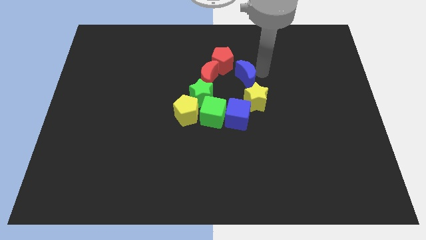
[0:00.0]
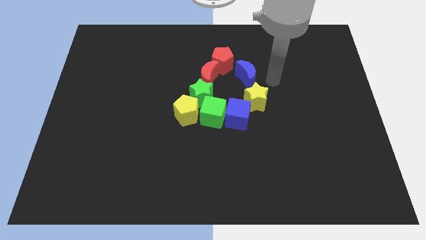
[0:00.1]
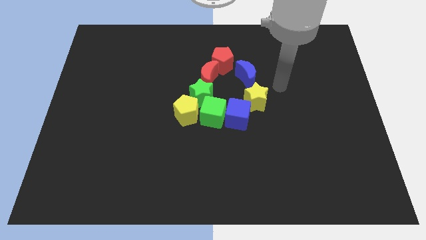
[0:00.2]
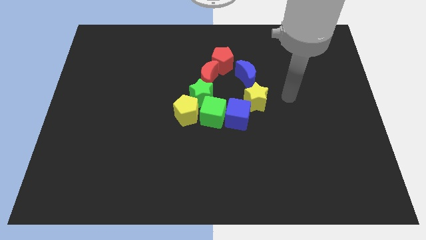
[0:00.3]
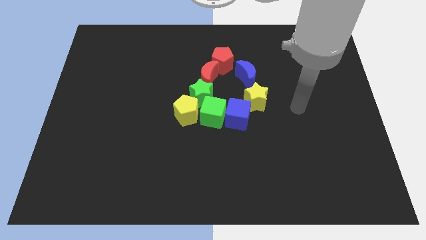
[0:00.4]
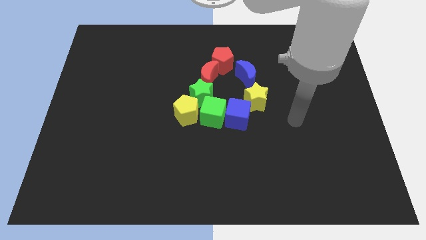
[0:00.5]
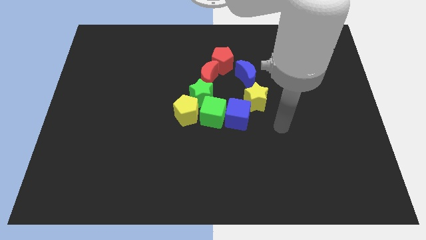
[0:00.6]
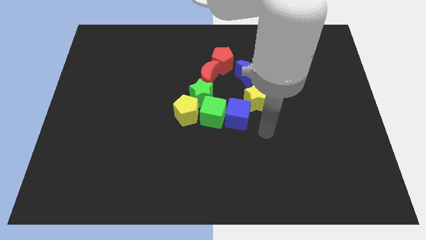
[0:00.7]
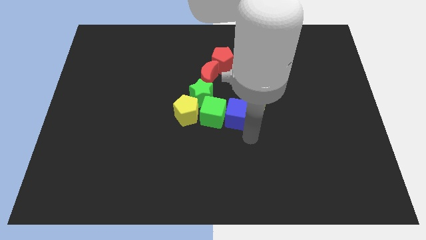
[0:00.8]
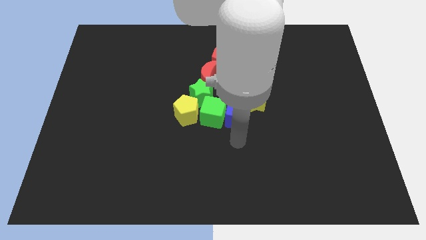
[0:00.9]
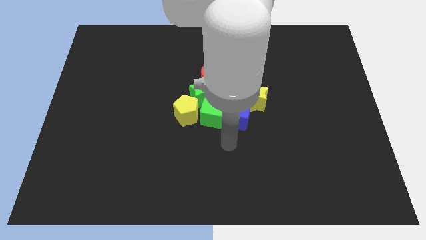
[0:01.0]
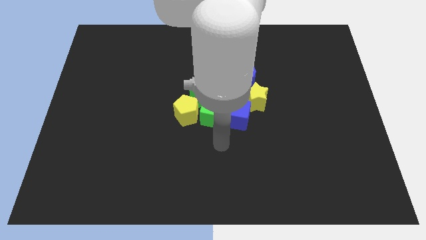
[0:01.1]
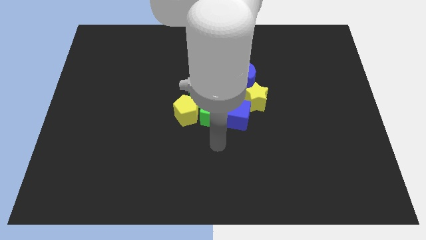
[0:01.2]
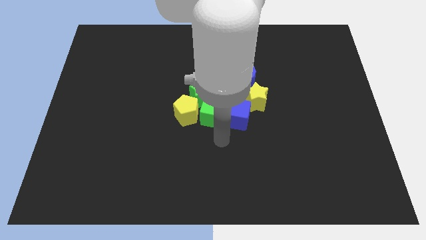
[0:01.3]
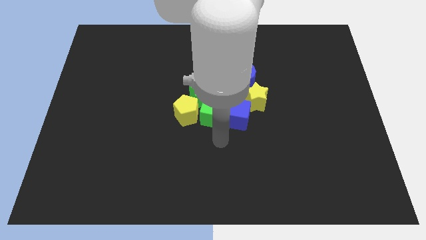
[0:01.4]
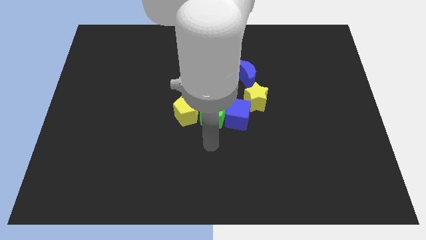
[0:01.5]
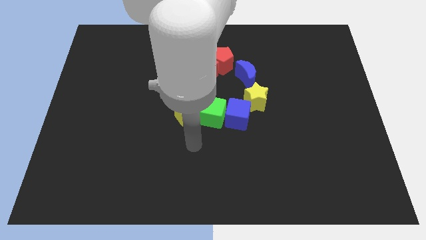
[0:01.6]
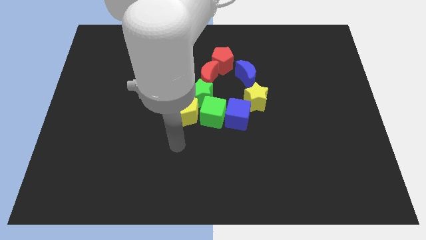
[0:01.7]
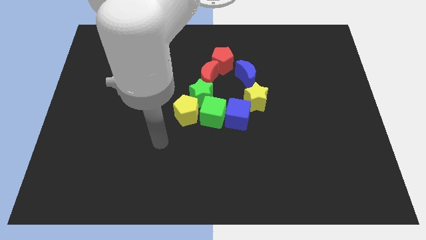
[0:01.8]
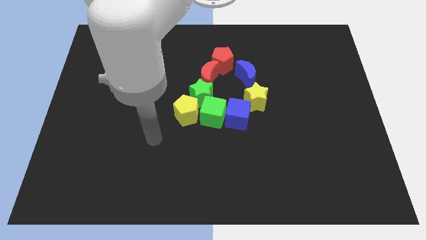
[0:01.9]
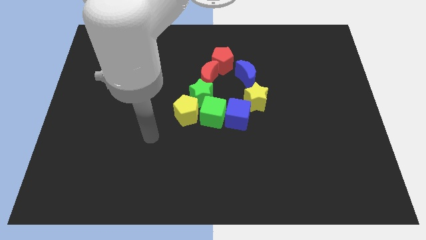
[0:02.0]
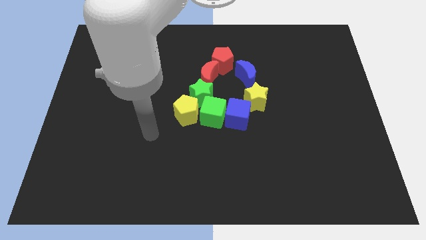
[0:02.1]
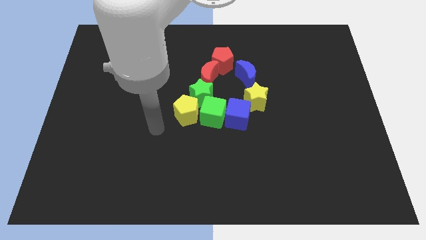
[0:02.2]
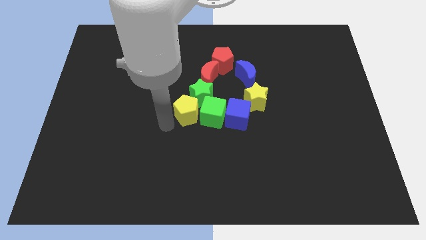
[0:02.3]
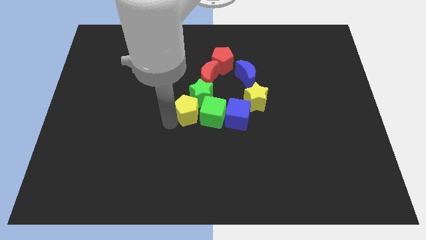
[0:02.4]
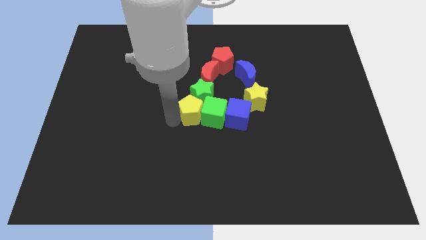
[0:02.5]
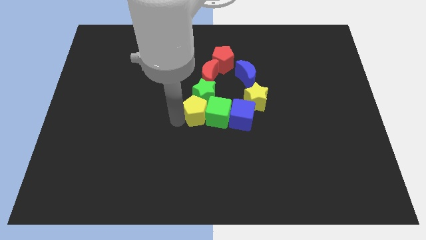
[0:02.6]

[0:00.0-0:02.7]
push the yellow pentagon closer to the cubes to form a circle

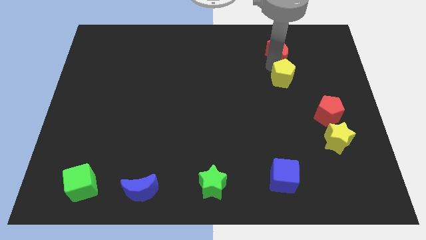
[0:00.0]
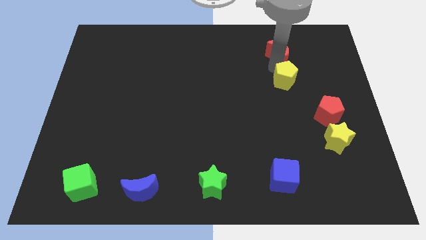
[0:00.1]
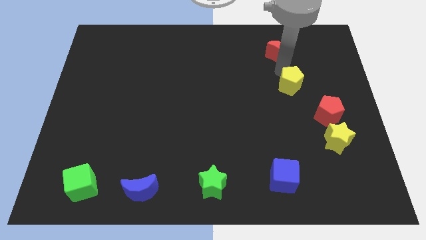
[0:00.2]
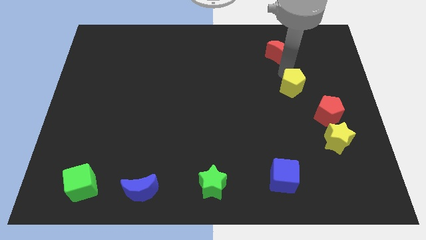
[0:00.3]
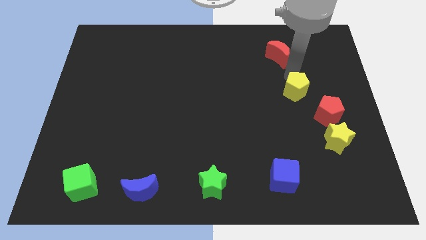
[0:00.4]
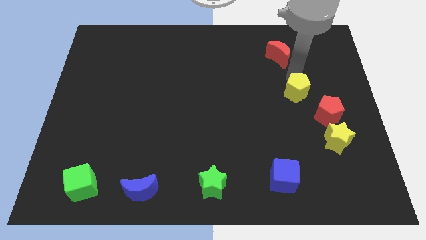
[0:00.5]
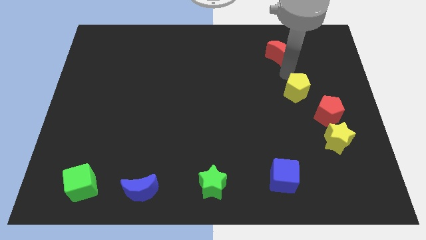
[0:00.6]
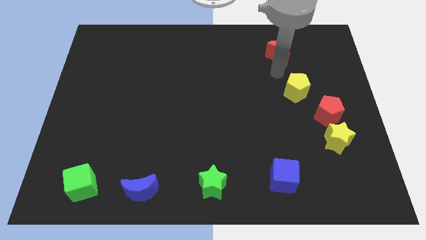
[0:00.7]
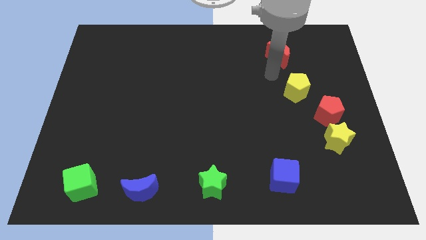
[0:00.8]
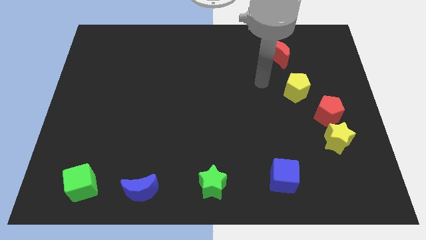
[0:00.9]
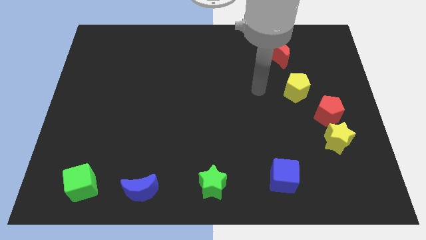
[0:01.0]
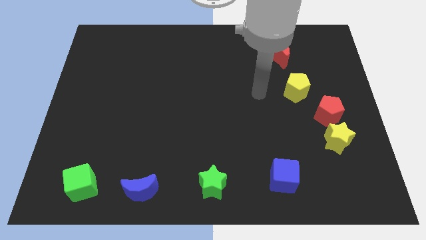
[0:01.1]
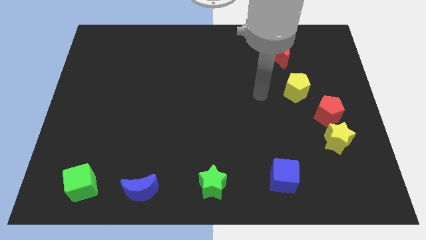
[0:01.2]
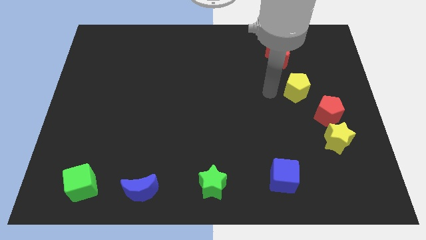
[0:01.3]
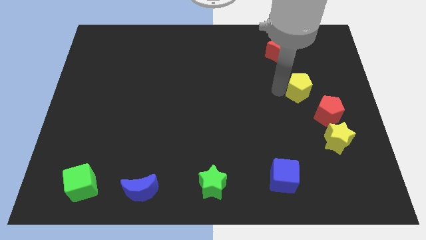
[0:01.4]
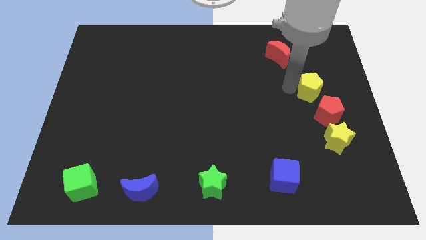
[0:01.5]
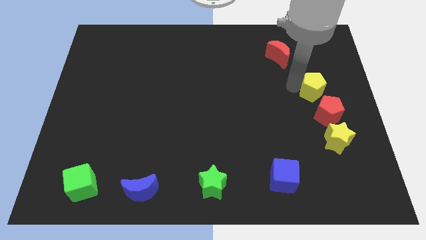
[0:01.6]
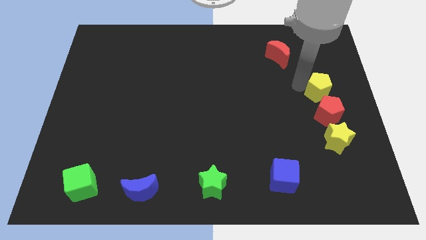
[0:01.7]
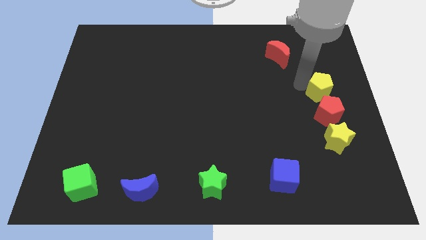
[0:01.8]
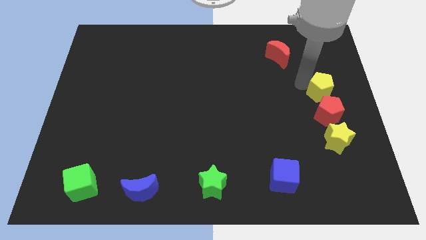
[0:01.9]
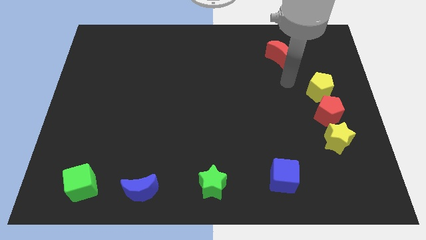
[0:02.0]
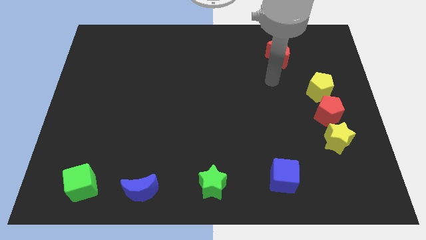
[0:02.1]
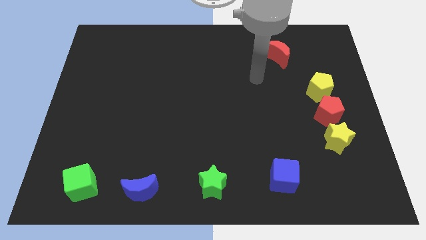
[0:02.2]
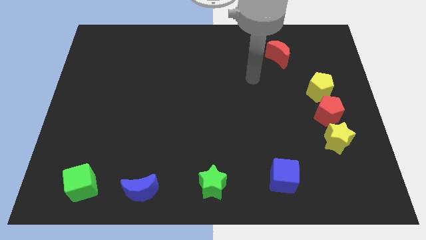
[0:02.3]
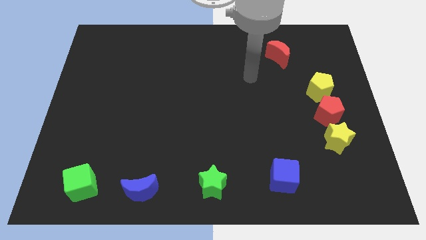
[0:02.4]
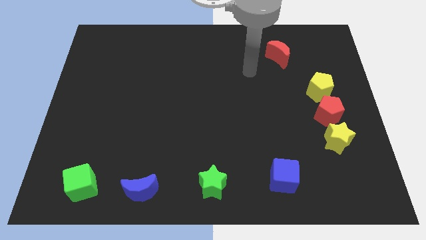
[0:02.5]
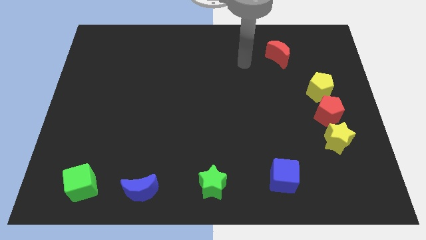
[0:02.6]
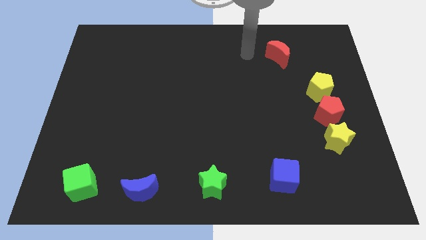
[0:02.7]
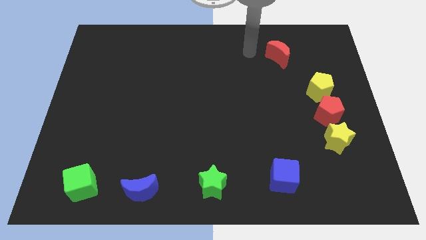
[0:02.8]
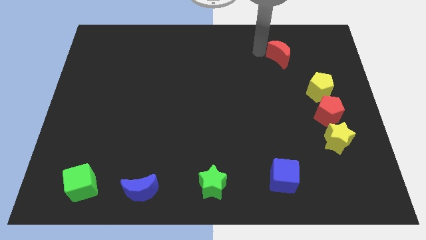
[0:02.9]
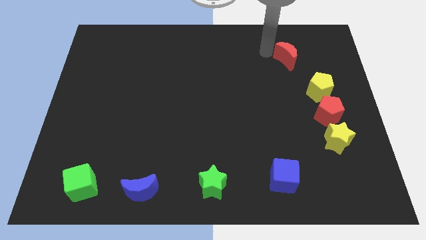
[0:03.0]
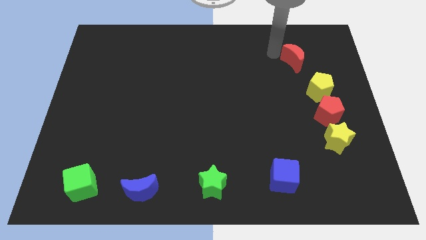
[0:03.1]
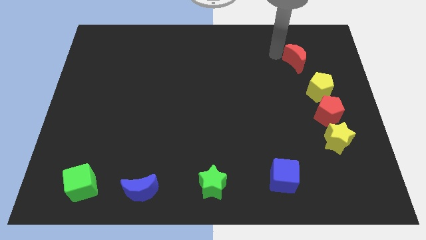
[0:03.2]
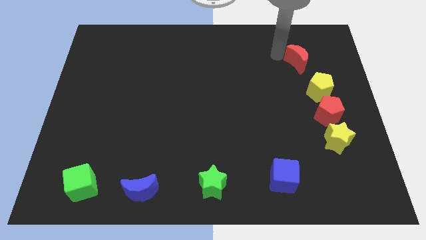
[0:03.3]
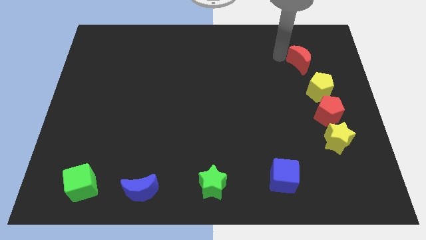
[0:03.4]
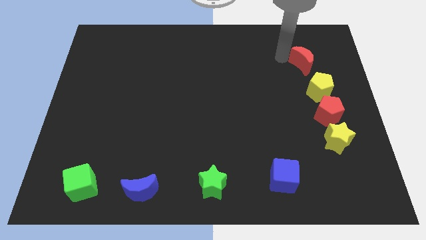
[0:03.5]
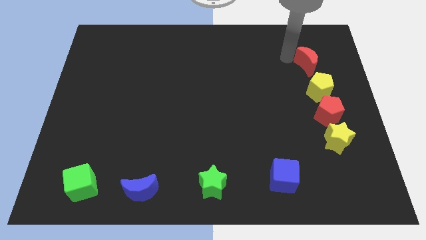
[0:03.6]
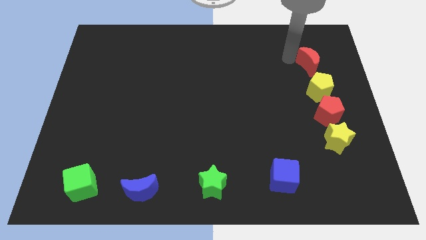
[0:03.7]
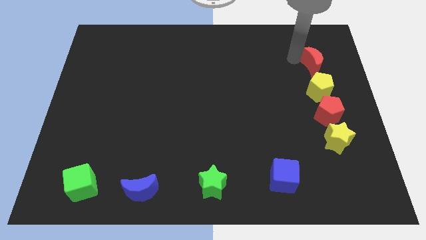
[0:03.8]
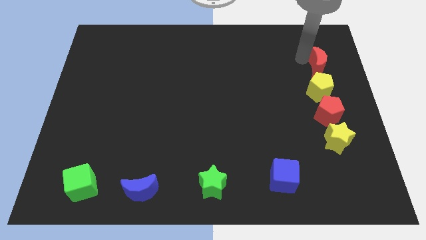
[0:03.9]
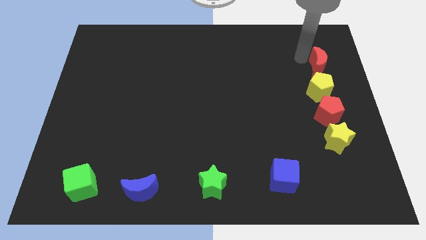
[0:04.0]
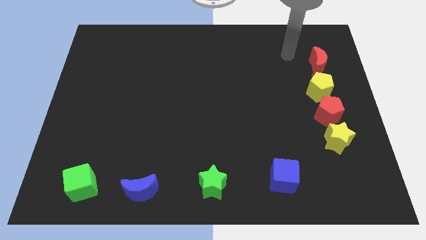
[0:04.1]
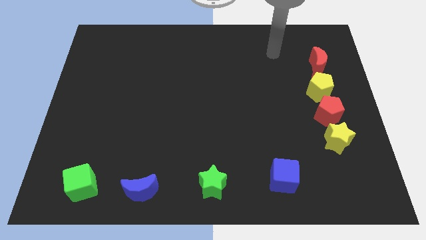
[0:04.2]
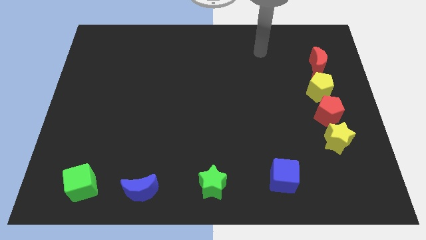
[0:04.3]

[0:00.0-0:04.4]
place the yellow penatgon and red moon above the red pentagon

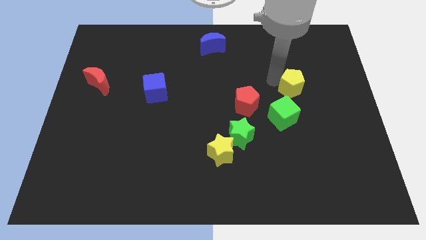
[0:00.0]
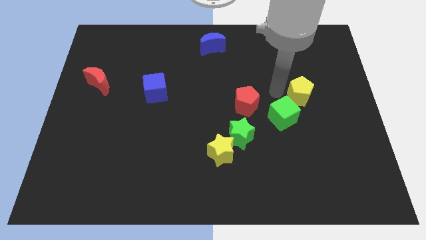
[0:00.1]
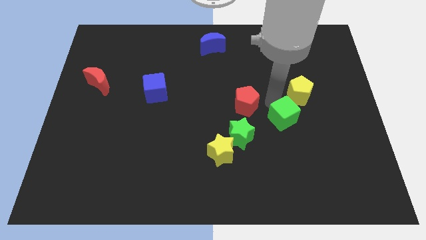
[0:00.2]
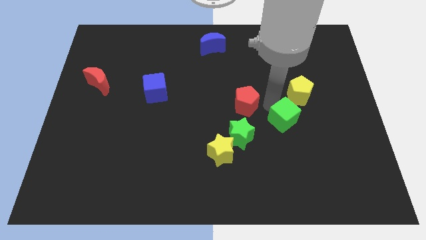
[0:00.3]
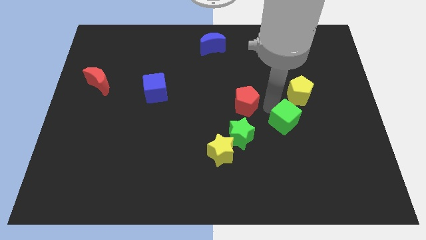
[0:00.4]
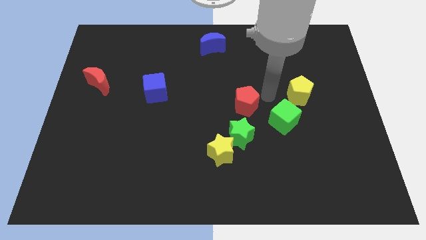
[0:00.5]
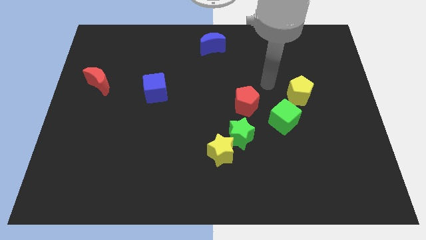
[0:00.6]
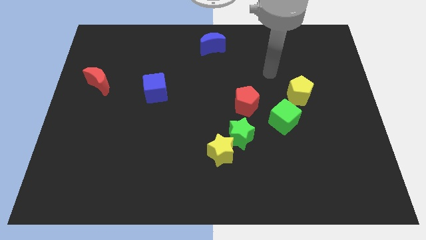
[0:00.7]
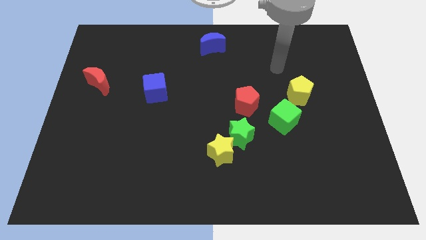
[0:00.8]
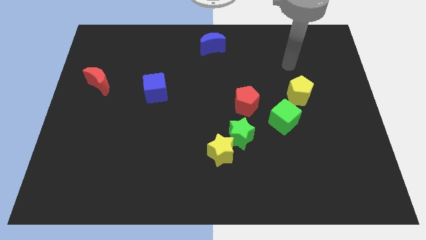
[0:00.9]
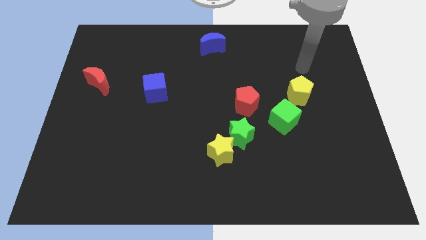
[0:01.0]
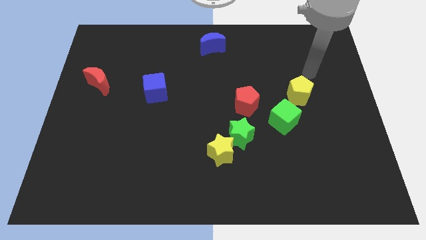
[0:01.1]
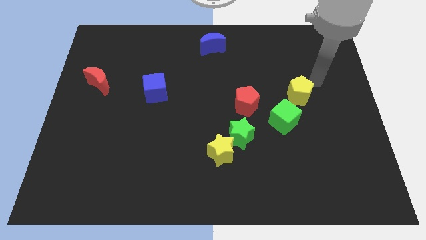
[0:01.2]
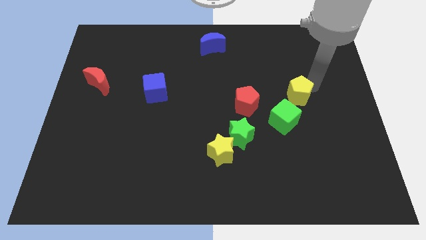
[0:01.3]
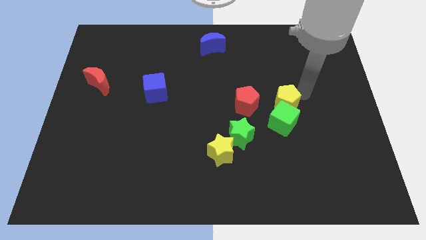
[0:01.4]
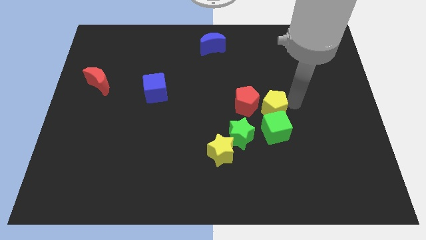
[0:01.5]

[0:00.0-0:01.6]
push yellow pentagon beside red pentagon

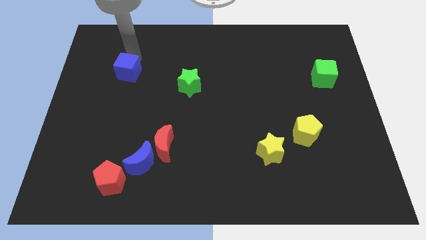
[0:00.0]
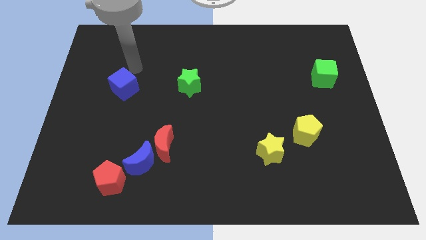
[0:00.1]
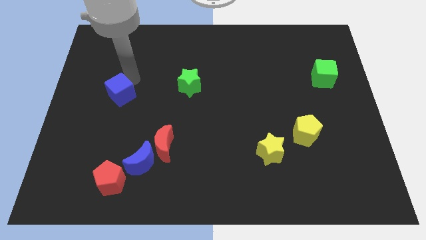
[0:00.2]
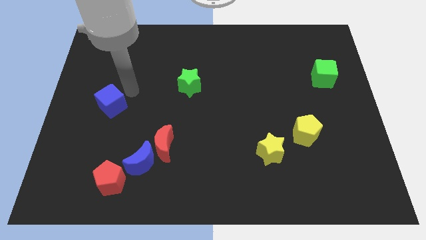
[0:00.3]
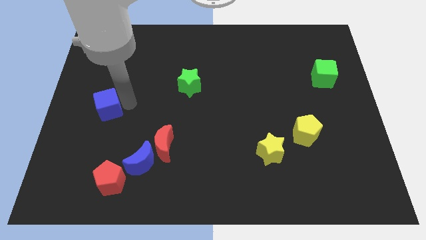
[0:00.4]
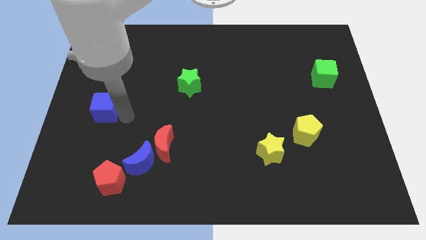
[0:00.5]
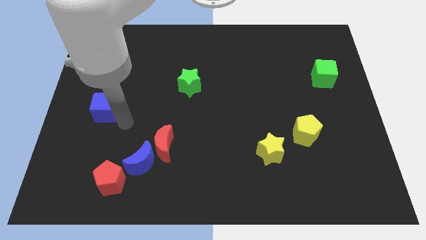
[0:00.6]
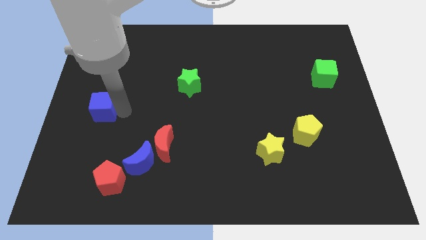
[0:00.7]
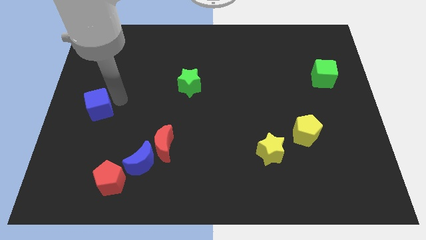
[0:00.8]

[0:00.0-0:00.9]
push the blue cube to the bottom side
